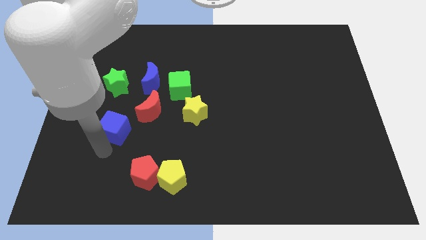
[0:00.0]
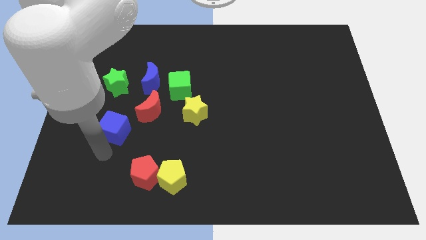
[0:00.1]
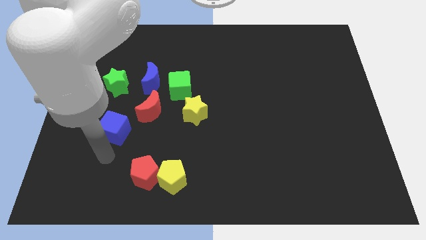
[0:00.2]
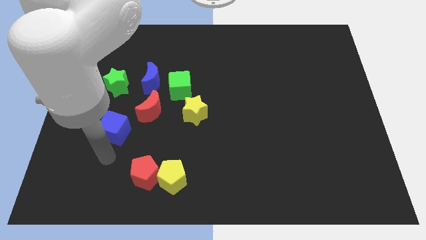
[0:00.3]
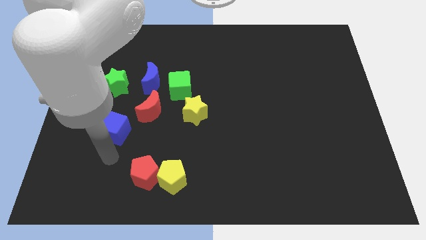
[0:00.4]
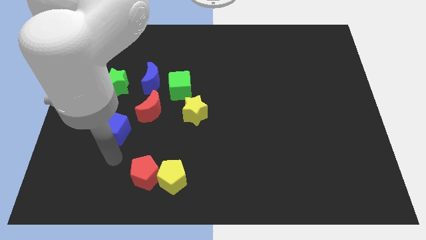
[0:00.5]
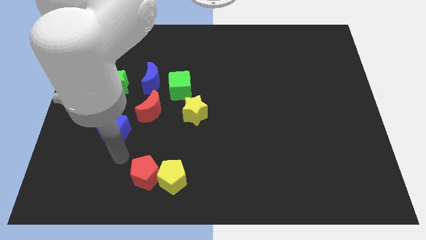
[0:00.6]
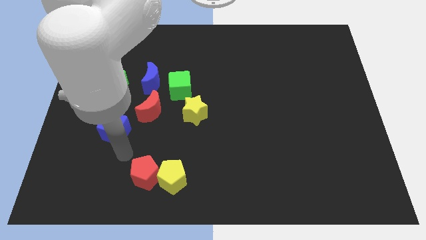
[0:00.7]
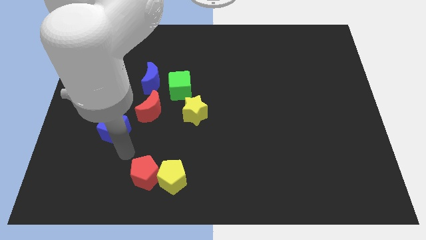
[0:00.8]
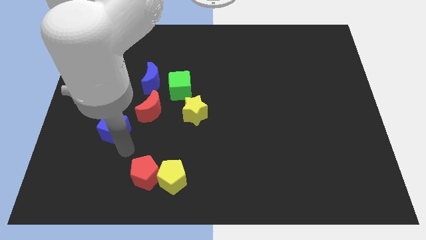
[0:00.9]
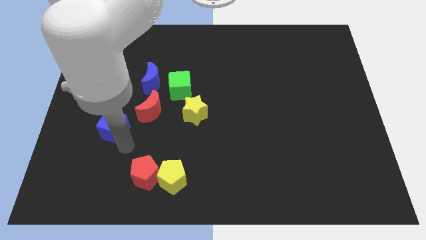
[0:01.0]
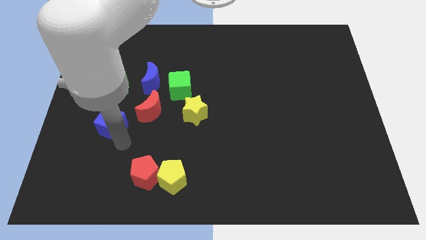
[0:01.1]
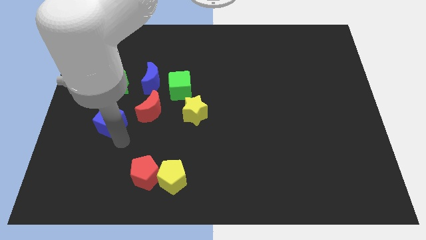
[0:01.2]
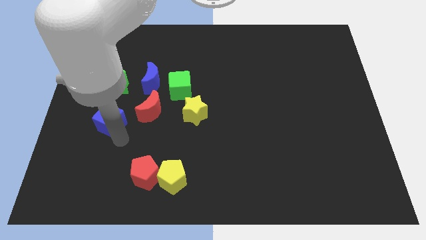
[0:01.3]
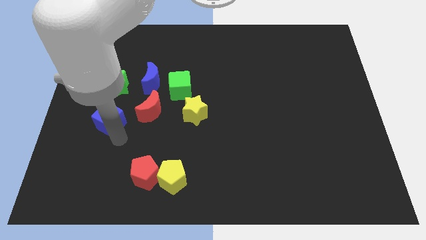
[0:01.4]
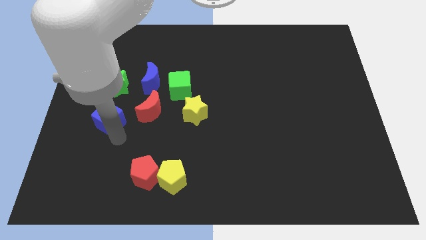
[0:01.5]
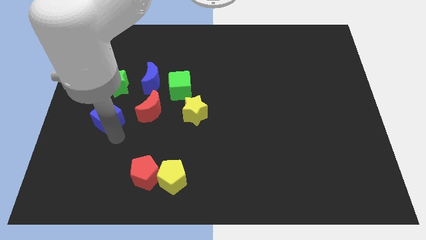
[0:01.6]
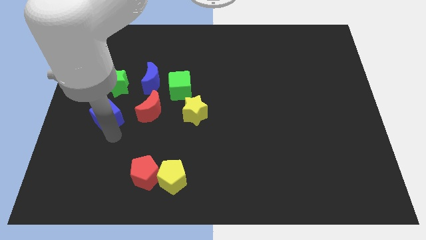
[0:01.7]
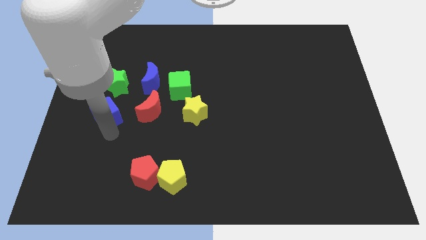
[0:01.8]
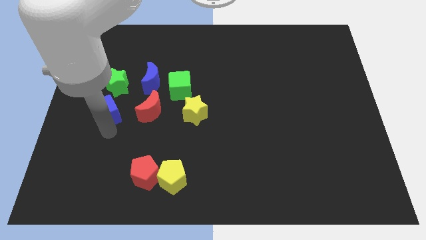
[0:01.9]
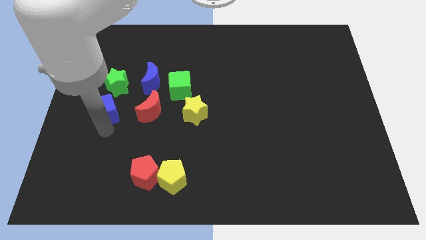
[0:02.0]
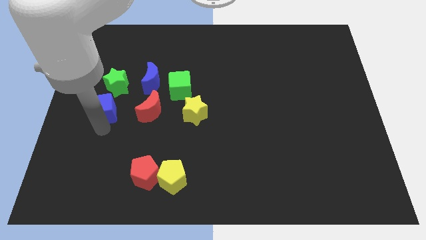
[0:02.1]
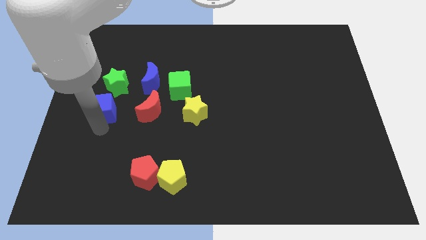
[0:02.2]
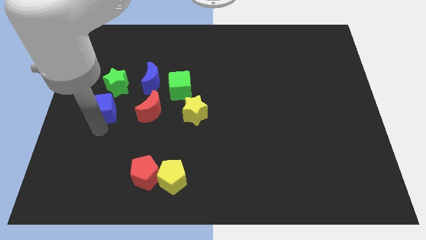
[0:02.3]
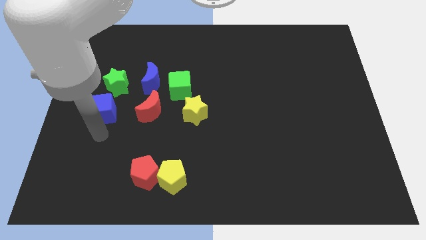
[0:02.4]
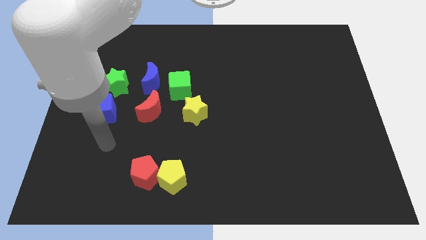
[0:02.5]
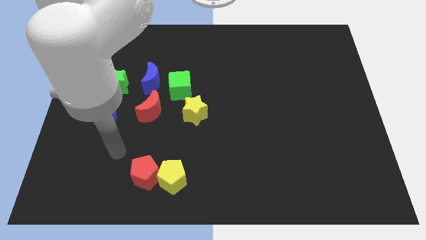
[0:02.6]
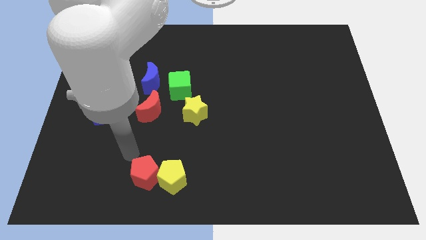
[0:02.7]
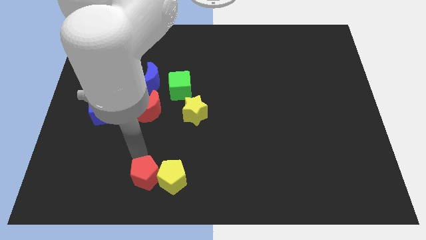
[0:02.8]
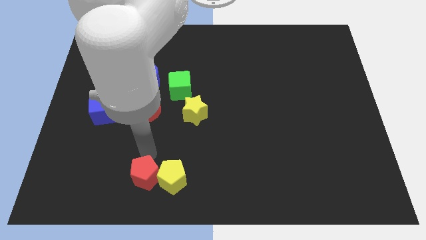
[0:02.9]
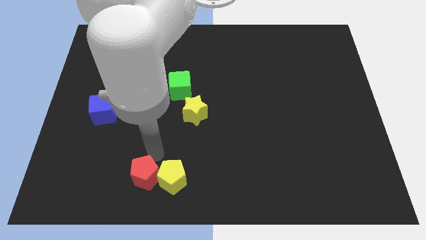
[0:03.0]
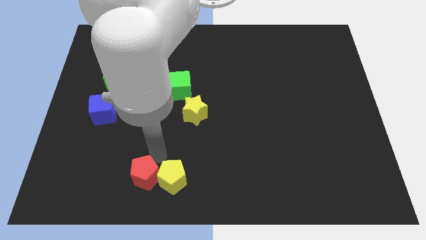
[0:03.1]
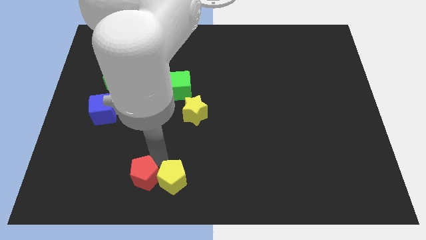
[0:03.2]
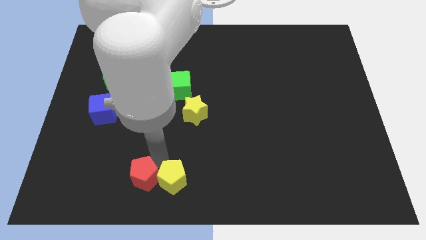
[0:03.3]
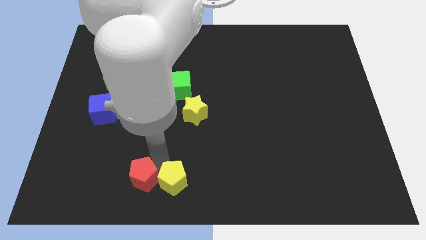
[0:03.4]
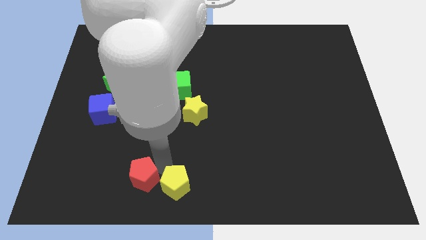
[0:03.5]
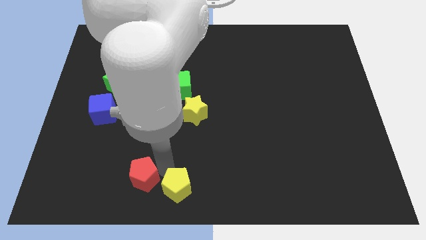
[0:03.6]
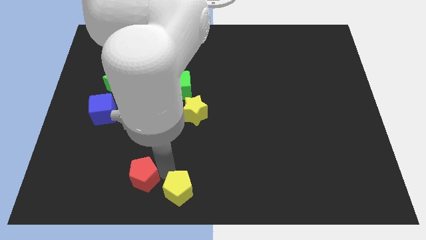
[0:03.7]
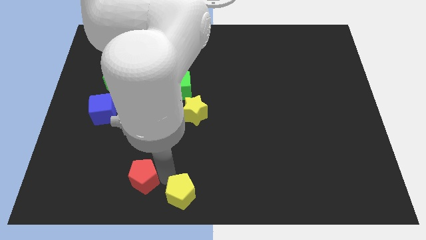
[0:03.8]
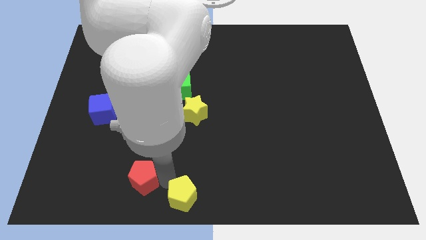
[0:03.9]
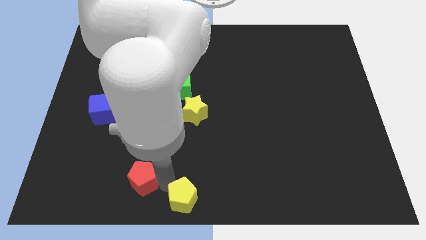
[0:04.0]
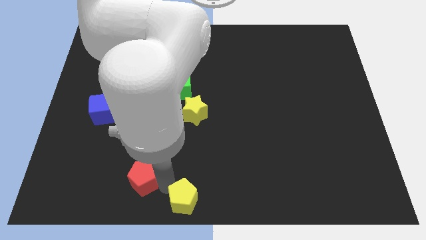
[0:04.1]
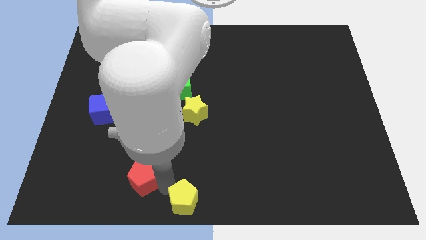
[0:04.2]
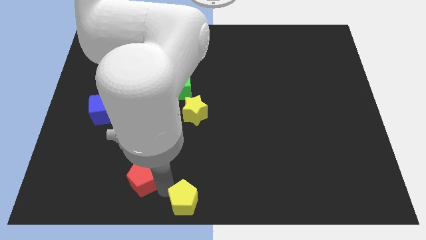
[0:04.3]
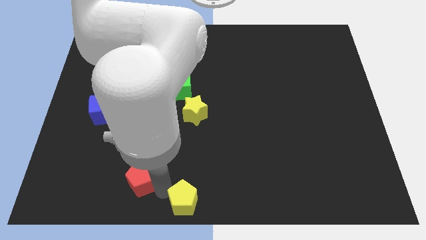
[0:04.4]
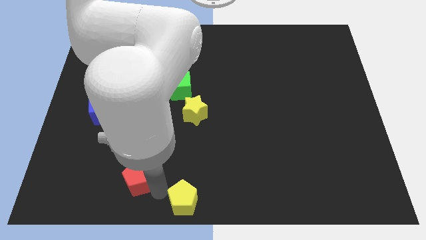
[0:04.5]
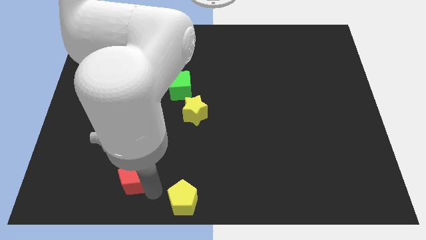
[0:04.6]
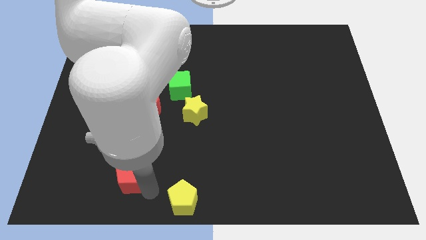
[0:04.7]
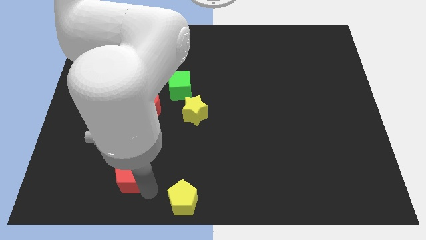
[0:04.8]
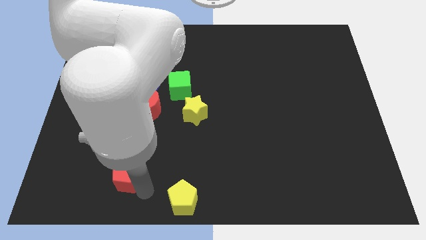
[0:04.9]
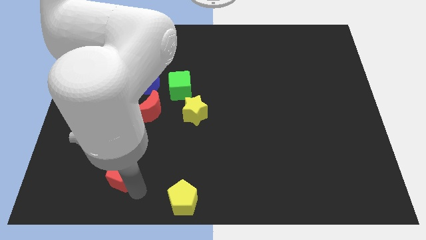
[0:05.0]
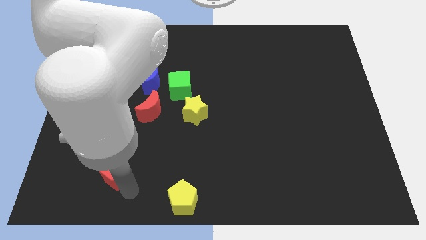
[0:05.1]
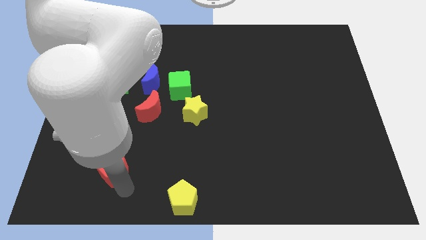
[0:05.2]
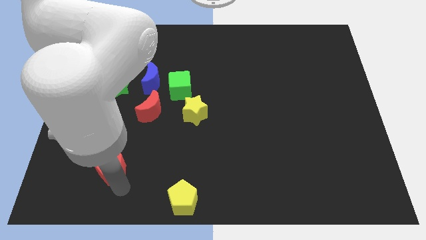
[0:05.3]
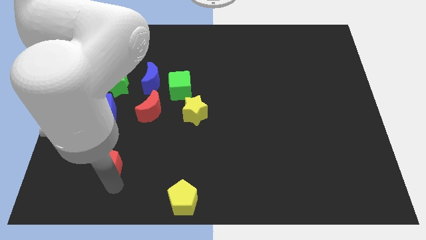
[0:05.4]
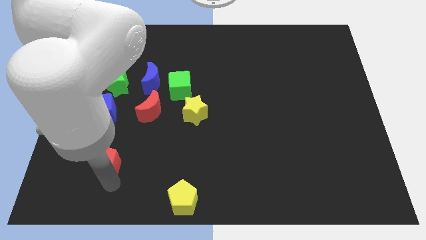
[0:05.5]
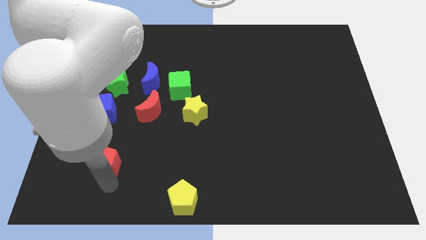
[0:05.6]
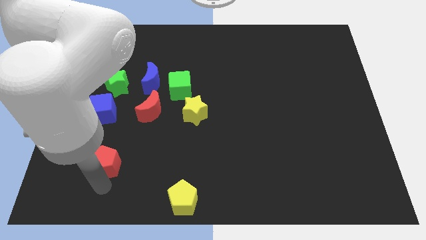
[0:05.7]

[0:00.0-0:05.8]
separate red and yellow pentagons

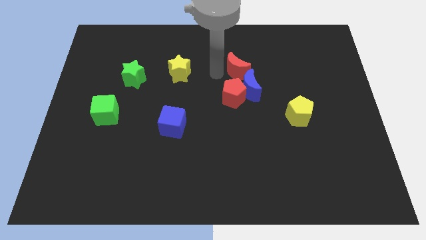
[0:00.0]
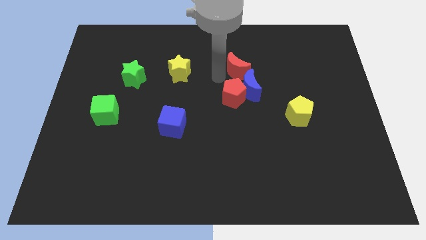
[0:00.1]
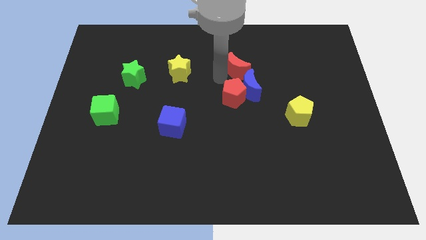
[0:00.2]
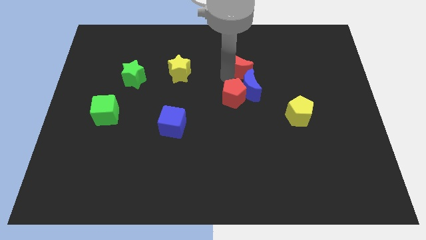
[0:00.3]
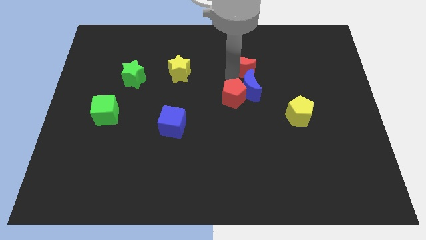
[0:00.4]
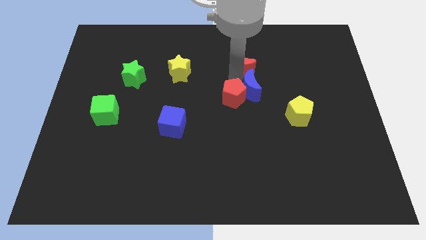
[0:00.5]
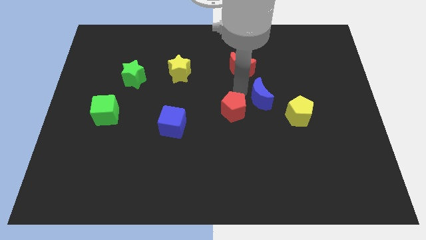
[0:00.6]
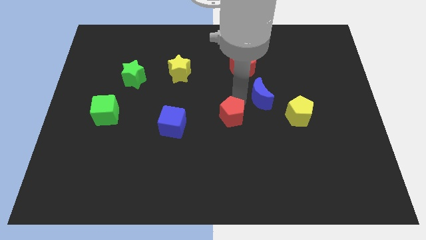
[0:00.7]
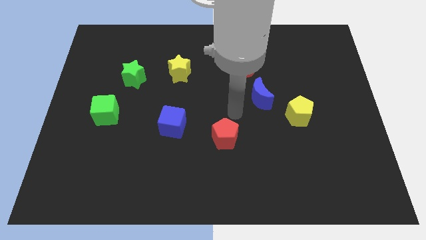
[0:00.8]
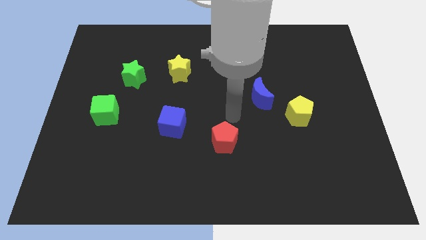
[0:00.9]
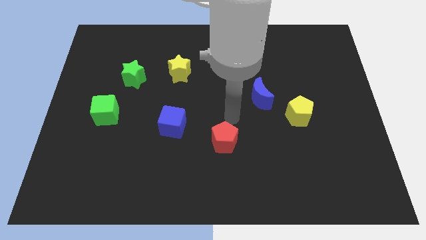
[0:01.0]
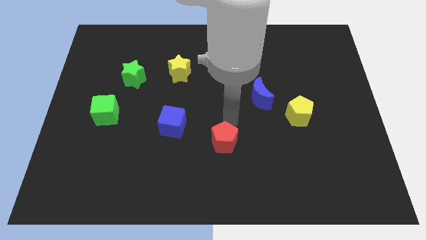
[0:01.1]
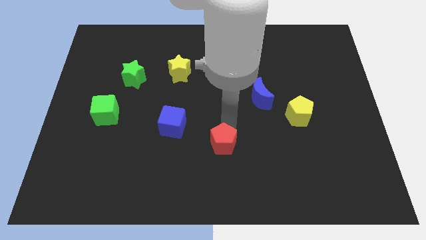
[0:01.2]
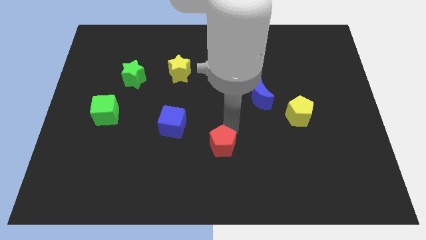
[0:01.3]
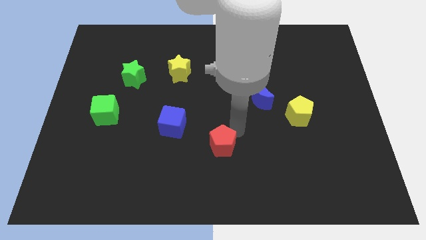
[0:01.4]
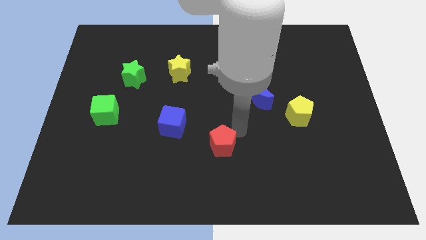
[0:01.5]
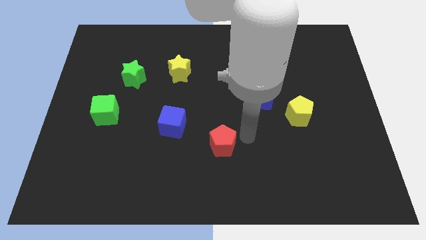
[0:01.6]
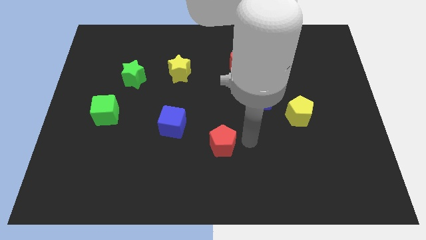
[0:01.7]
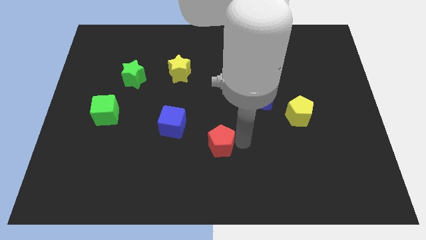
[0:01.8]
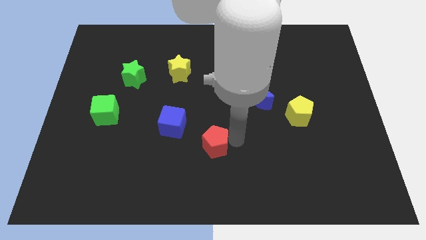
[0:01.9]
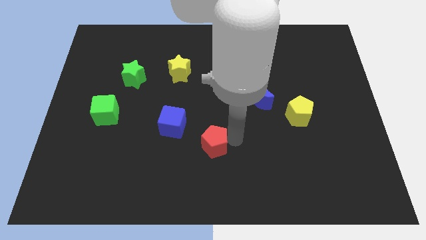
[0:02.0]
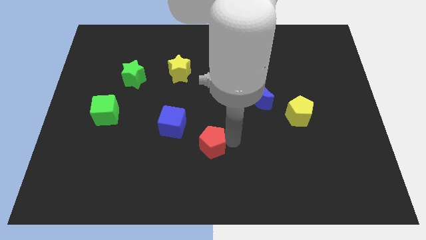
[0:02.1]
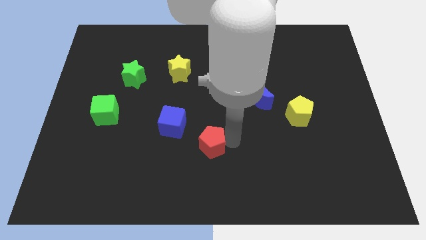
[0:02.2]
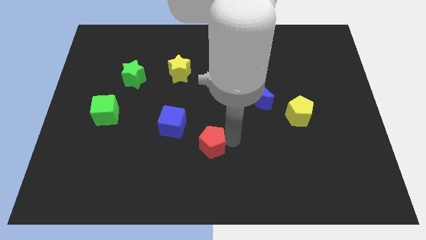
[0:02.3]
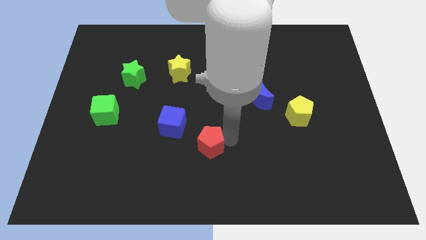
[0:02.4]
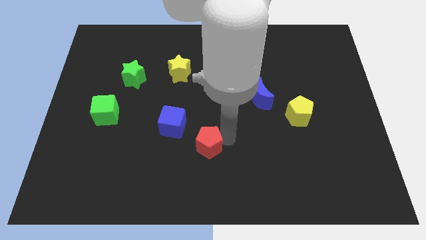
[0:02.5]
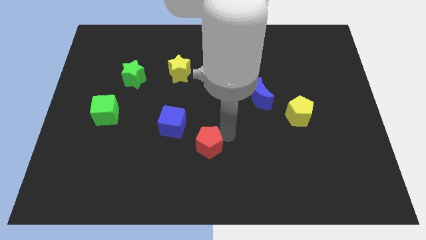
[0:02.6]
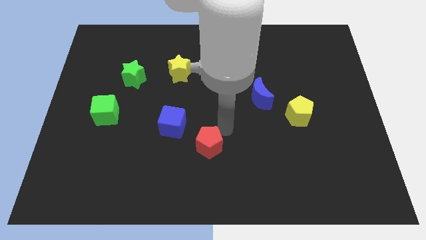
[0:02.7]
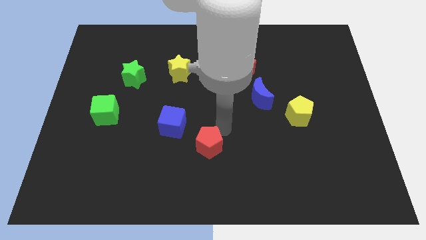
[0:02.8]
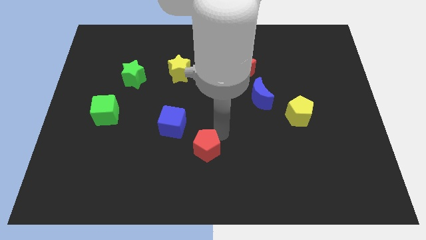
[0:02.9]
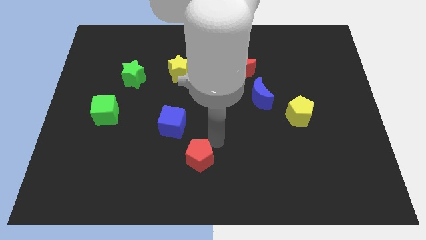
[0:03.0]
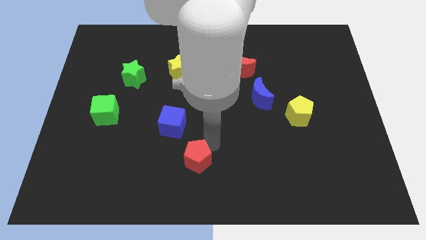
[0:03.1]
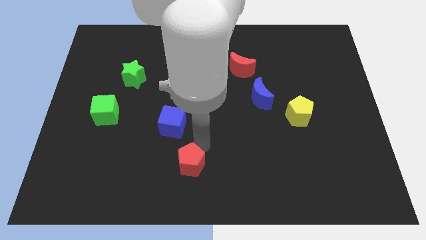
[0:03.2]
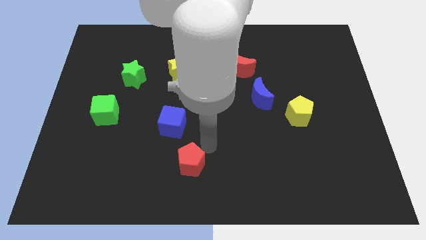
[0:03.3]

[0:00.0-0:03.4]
place the red pentagon to the bottom center of the board
